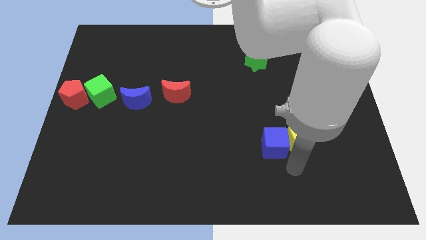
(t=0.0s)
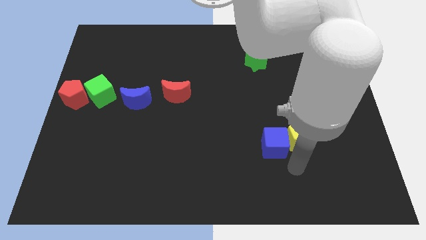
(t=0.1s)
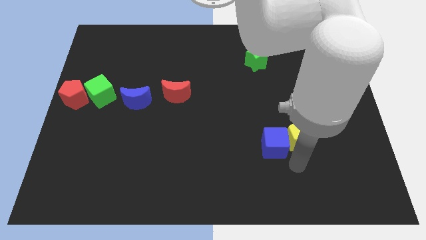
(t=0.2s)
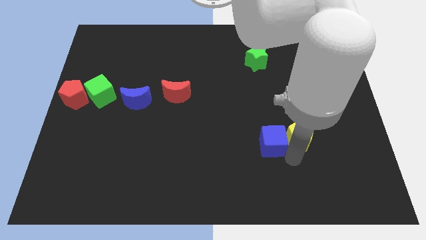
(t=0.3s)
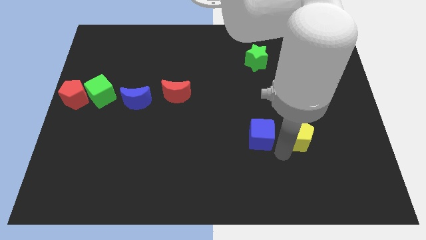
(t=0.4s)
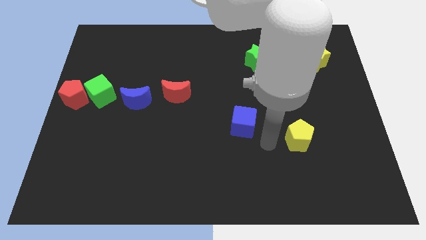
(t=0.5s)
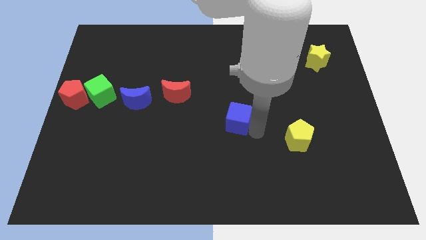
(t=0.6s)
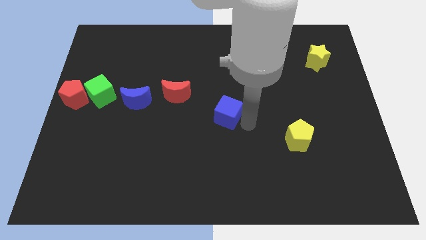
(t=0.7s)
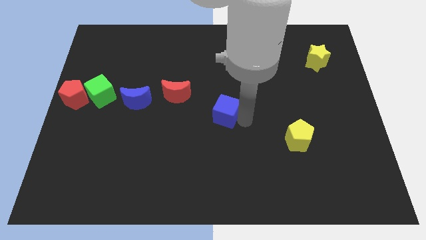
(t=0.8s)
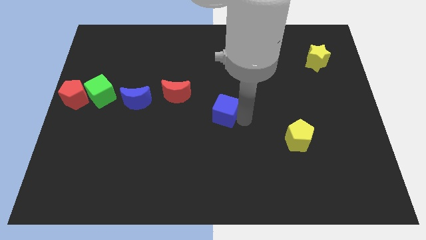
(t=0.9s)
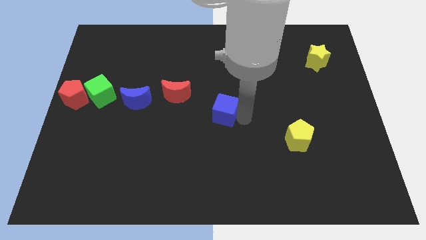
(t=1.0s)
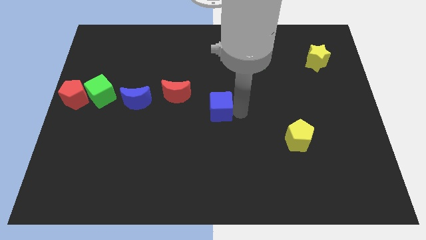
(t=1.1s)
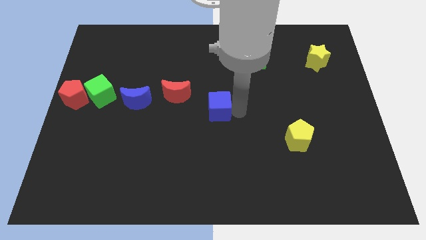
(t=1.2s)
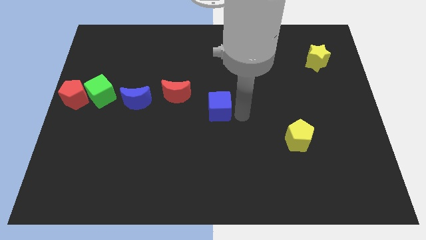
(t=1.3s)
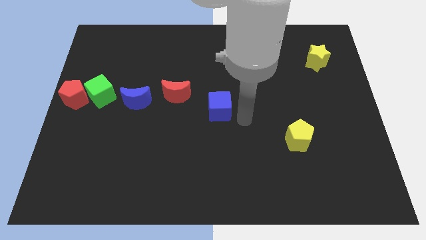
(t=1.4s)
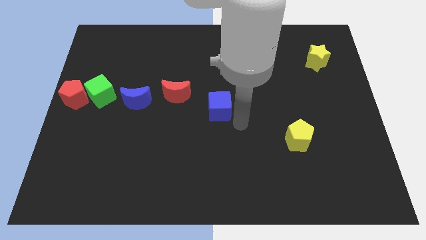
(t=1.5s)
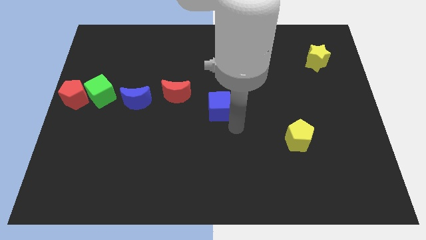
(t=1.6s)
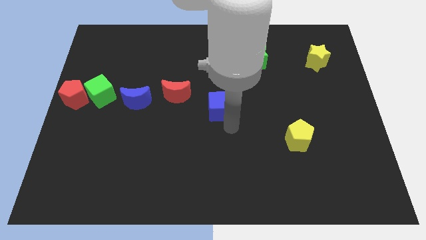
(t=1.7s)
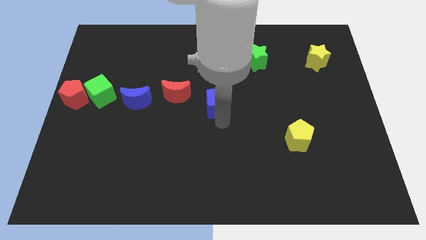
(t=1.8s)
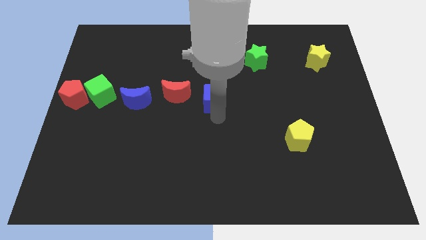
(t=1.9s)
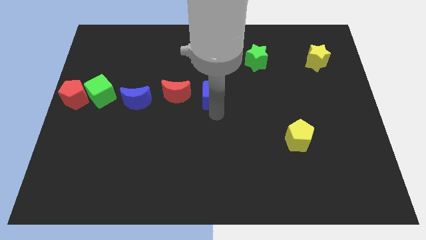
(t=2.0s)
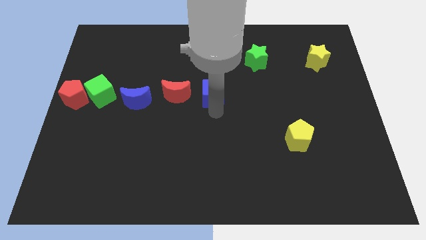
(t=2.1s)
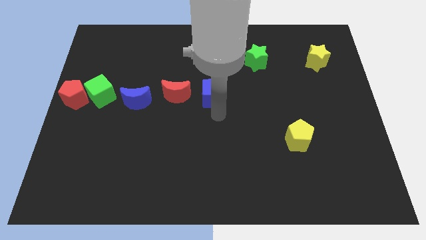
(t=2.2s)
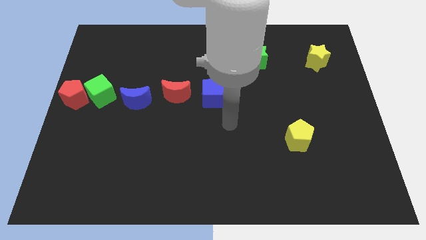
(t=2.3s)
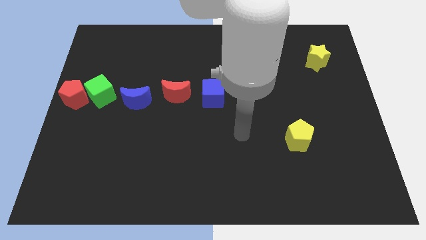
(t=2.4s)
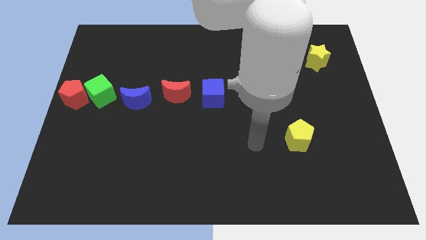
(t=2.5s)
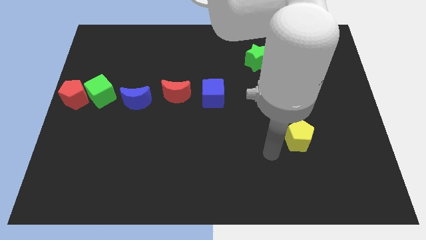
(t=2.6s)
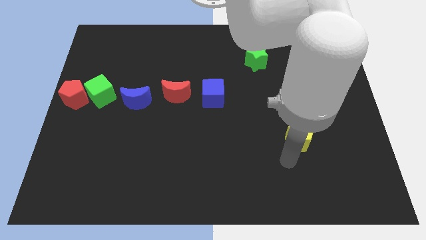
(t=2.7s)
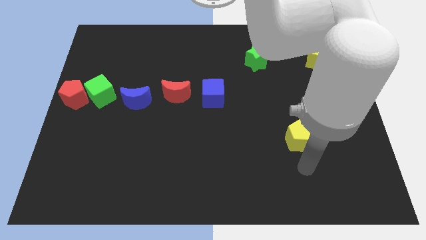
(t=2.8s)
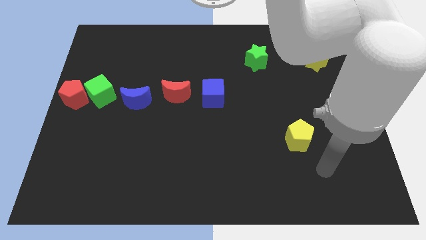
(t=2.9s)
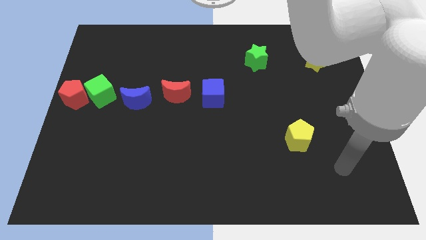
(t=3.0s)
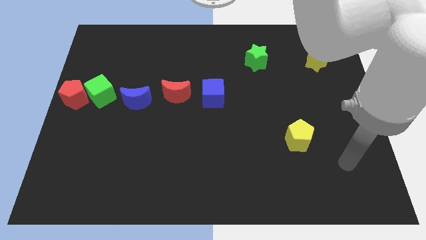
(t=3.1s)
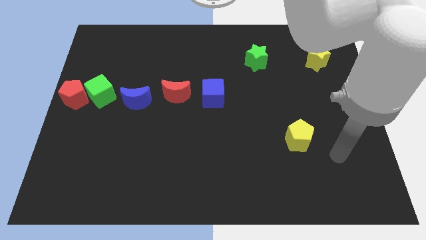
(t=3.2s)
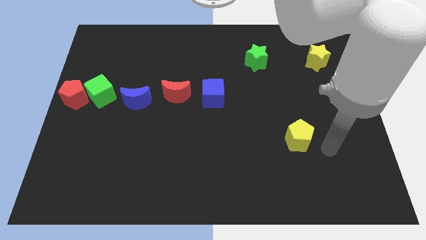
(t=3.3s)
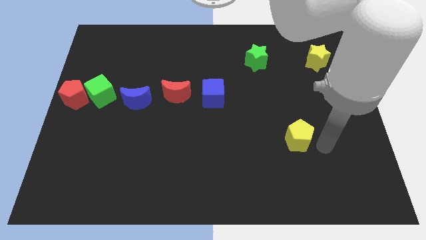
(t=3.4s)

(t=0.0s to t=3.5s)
place the blue cube horizontally to the right side of the red crescent

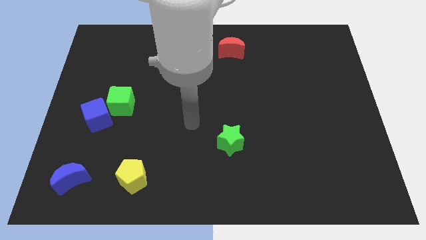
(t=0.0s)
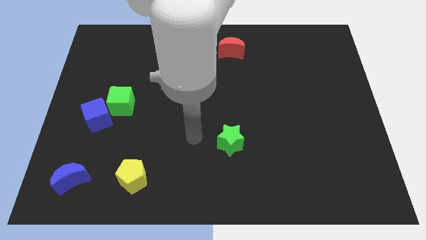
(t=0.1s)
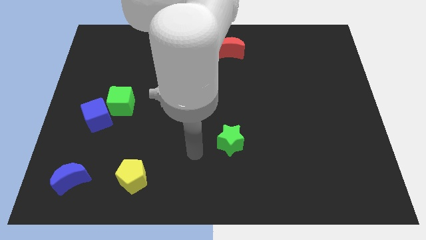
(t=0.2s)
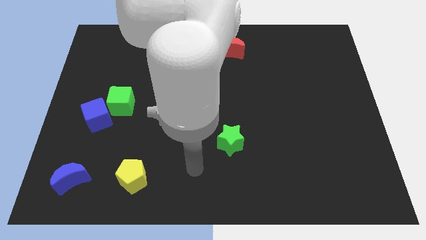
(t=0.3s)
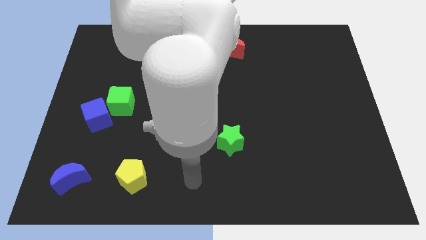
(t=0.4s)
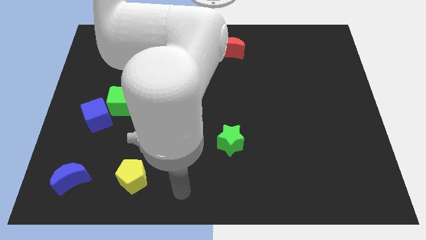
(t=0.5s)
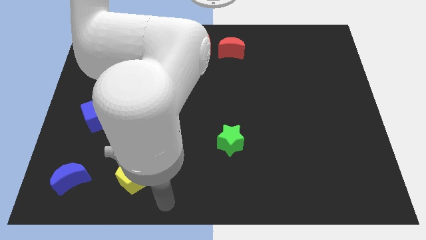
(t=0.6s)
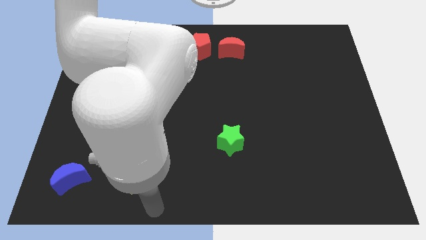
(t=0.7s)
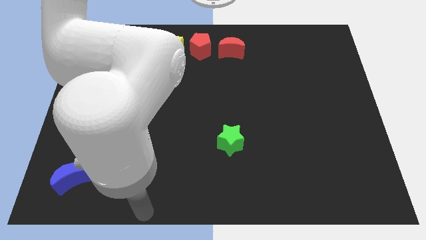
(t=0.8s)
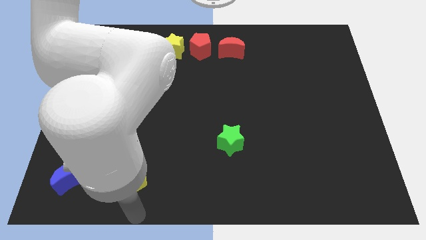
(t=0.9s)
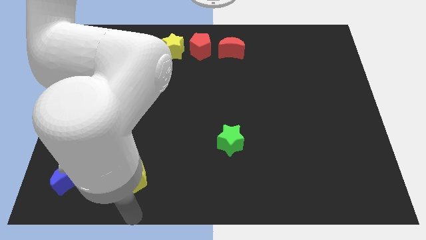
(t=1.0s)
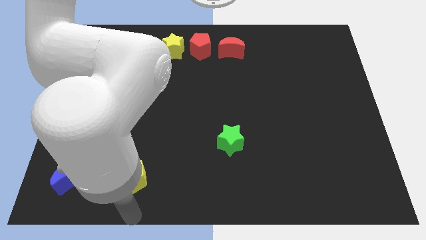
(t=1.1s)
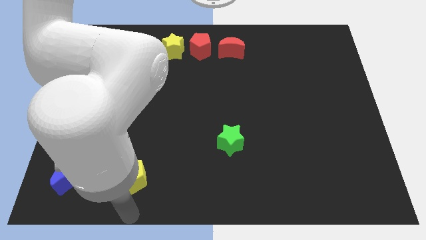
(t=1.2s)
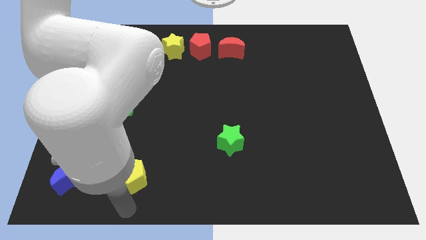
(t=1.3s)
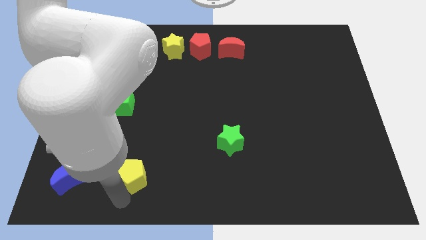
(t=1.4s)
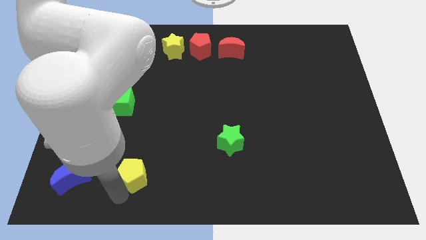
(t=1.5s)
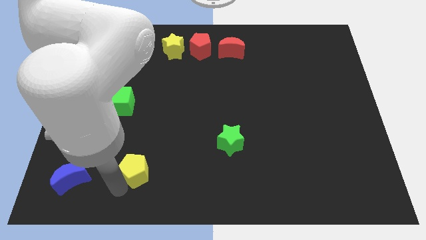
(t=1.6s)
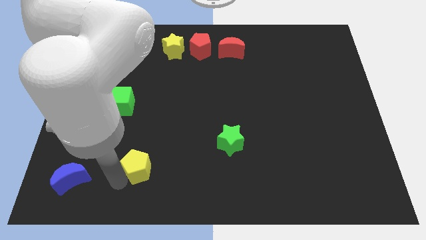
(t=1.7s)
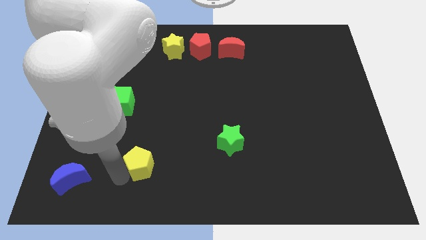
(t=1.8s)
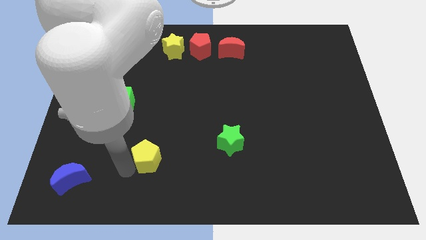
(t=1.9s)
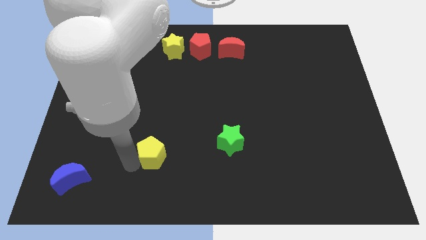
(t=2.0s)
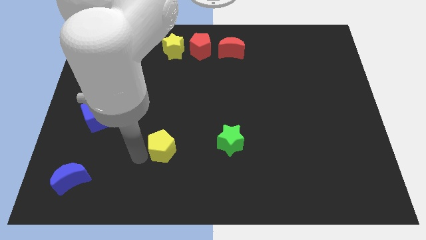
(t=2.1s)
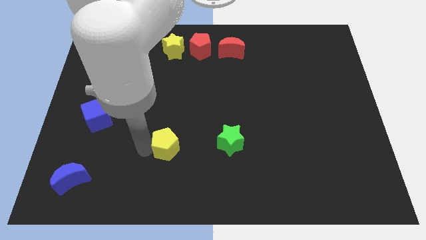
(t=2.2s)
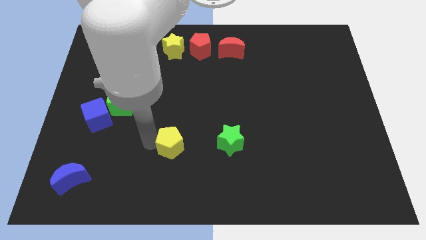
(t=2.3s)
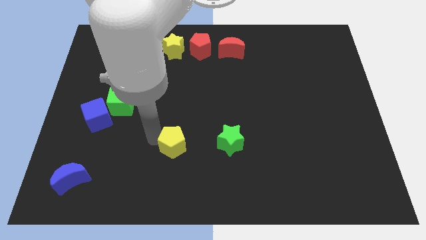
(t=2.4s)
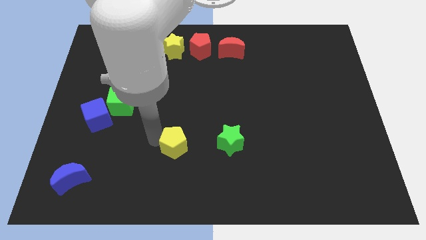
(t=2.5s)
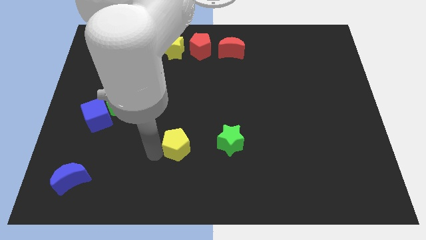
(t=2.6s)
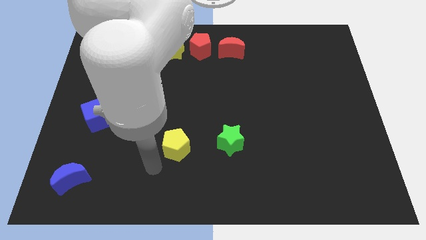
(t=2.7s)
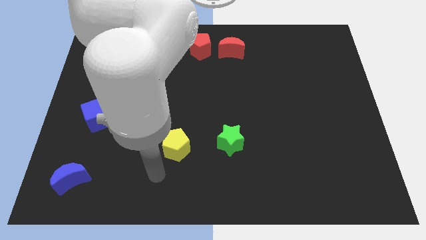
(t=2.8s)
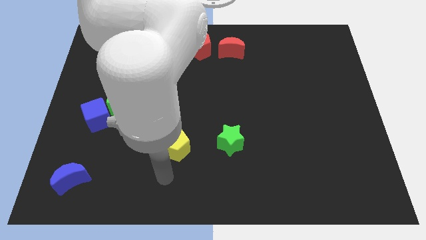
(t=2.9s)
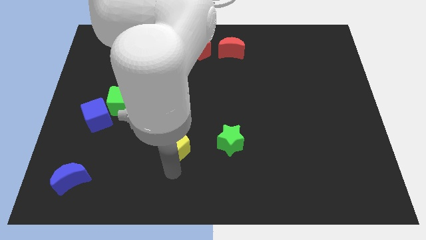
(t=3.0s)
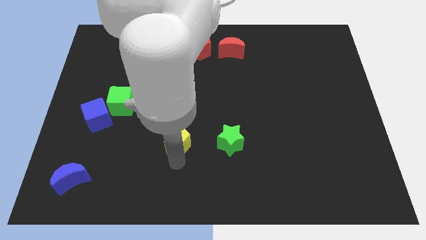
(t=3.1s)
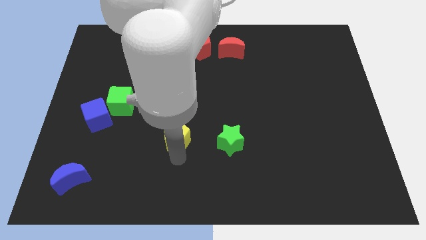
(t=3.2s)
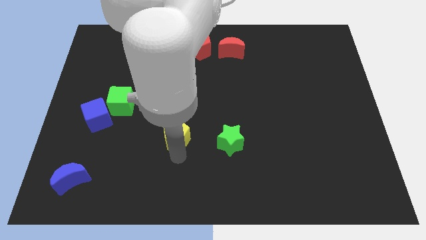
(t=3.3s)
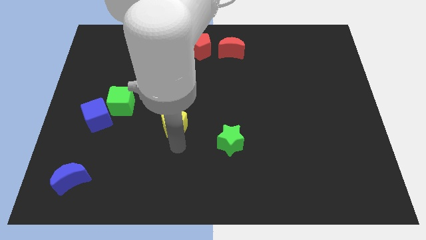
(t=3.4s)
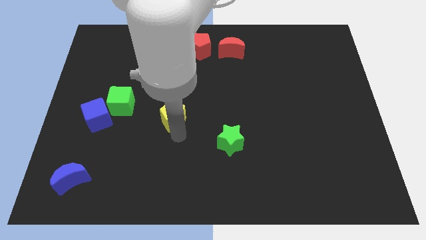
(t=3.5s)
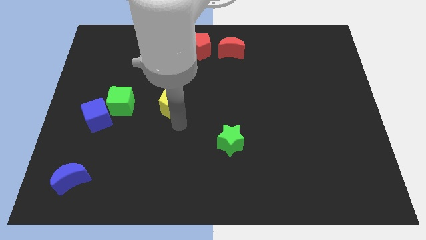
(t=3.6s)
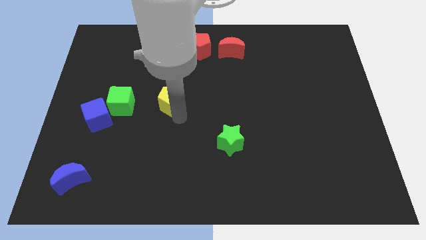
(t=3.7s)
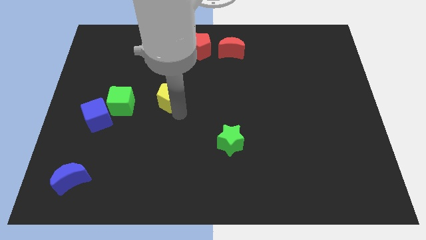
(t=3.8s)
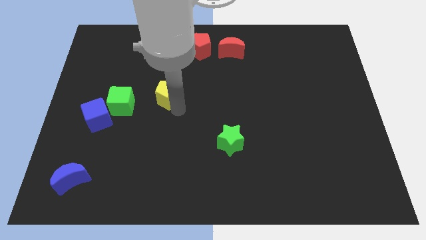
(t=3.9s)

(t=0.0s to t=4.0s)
move yellow pentagon slightly towards up

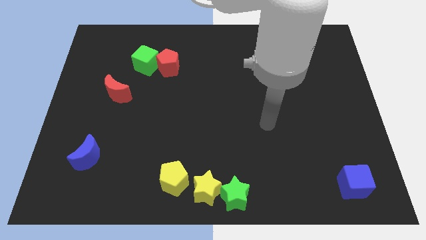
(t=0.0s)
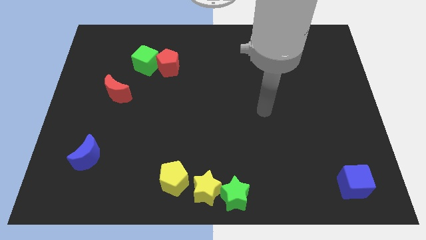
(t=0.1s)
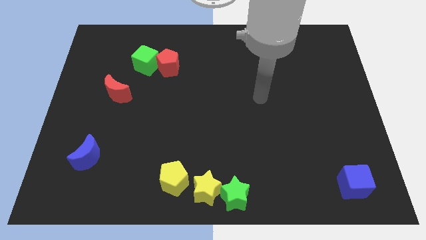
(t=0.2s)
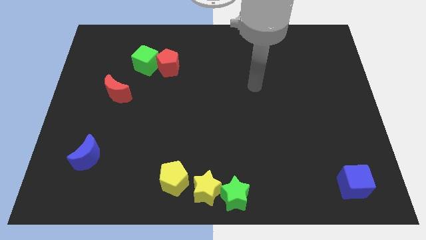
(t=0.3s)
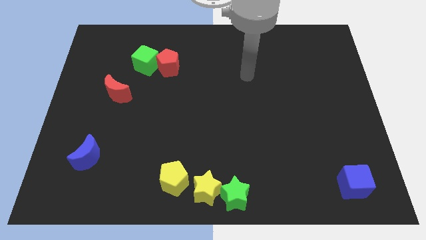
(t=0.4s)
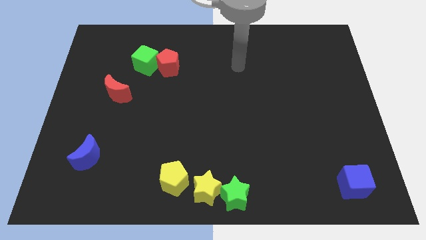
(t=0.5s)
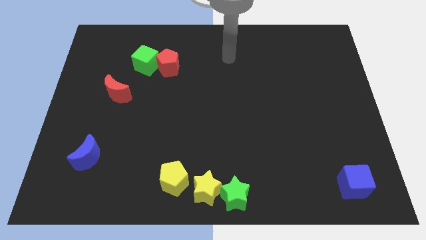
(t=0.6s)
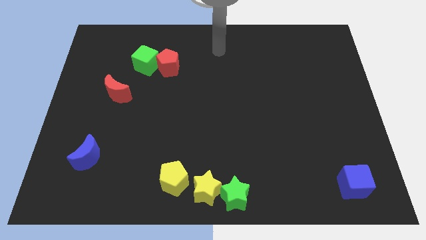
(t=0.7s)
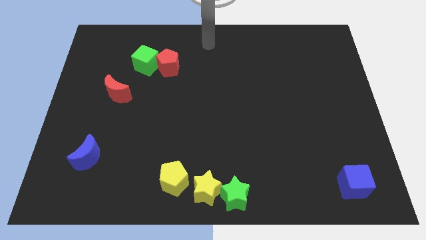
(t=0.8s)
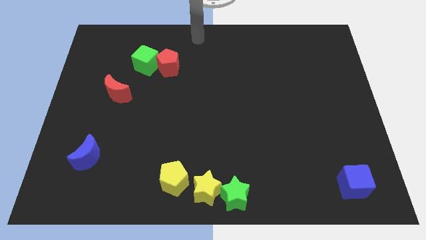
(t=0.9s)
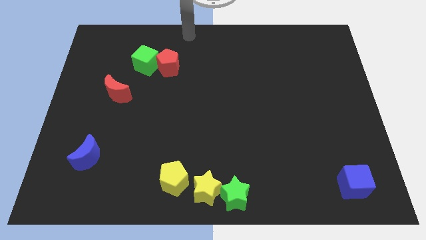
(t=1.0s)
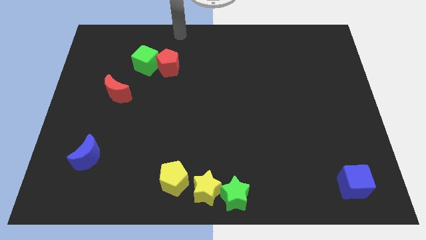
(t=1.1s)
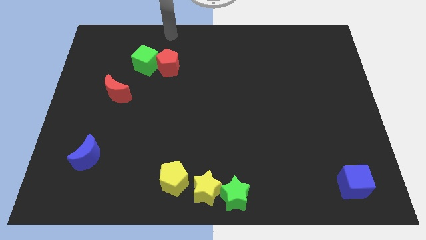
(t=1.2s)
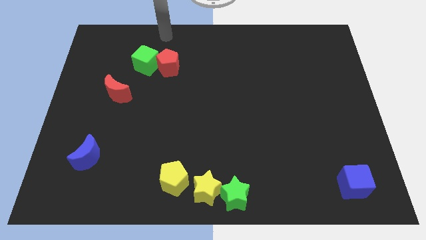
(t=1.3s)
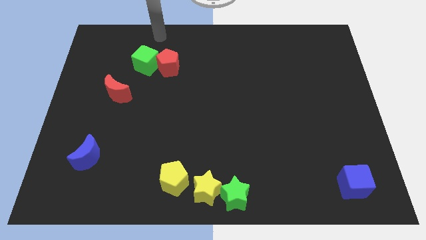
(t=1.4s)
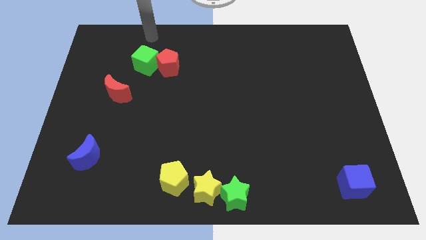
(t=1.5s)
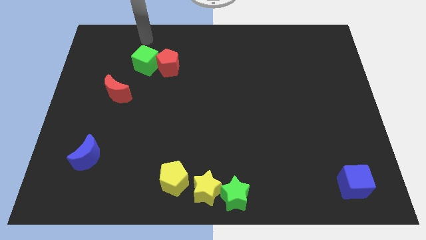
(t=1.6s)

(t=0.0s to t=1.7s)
point your arm at the top side of the green cube
